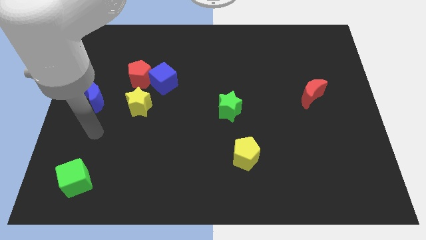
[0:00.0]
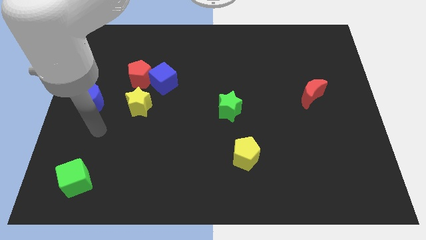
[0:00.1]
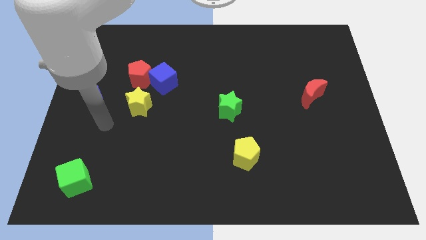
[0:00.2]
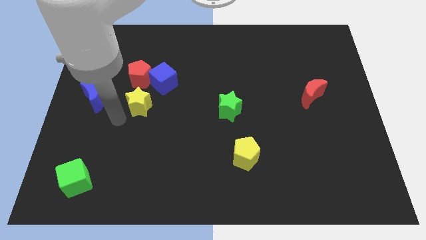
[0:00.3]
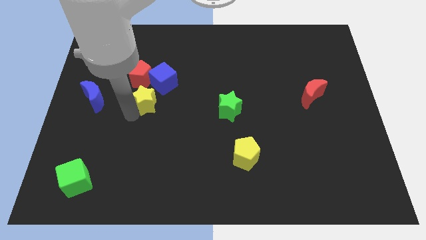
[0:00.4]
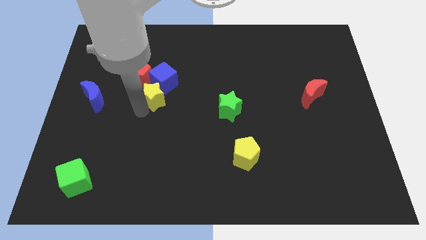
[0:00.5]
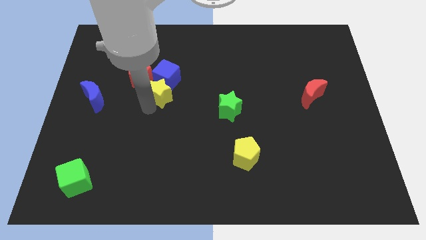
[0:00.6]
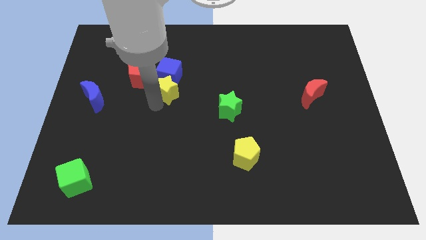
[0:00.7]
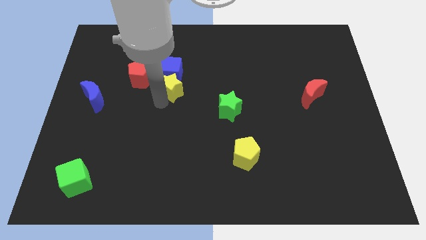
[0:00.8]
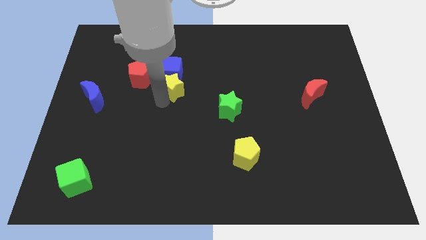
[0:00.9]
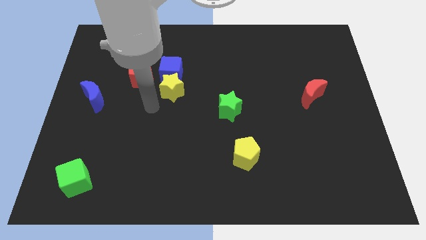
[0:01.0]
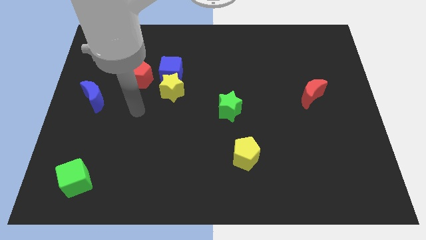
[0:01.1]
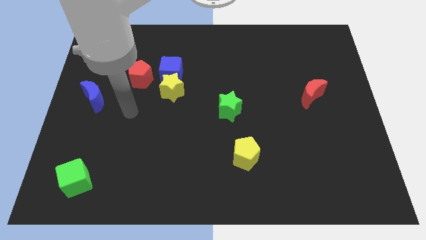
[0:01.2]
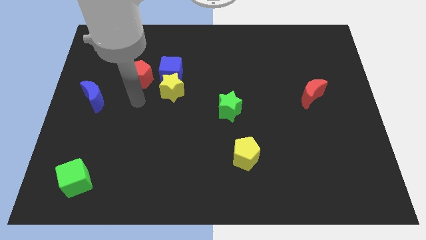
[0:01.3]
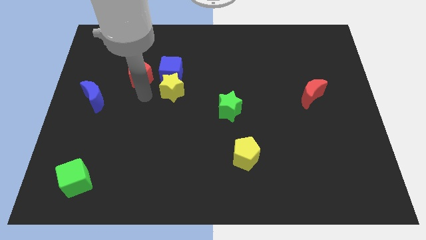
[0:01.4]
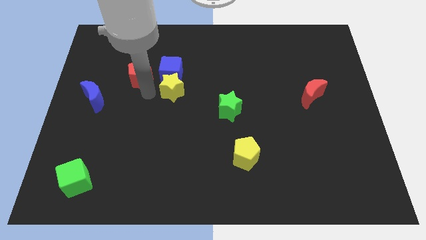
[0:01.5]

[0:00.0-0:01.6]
place the yellow star below the blue cube

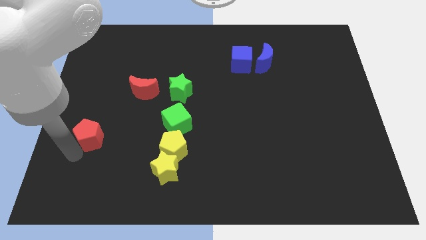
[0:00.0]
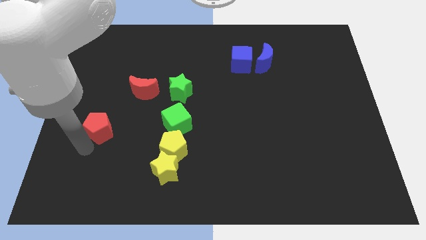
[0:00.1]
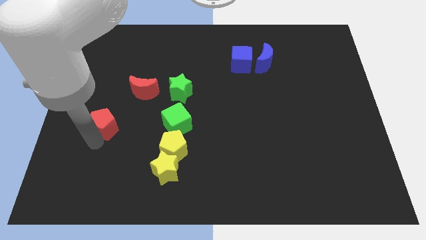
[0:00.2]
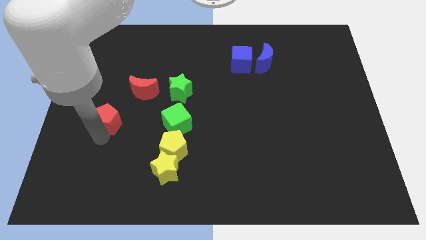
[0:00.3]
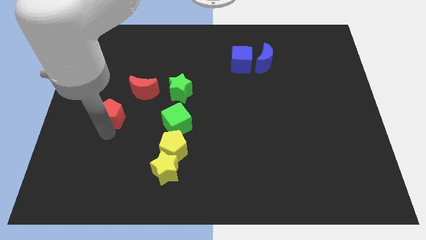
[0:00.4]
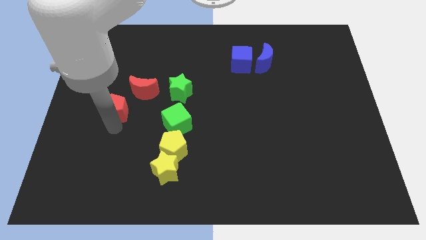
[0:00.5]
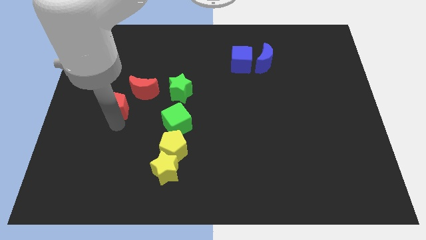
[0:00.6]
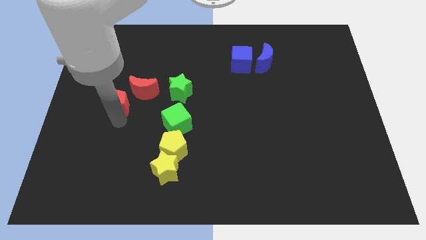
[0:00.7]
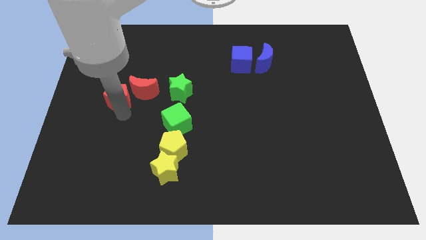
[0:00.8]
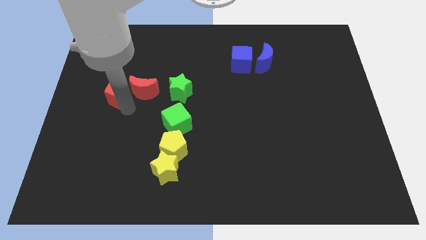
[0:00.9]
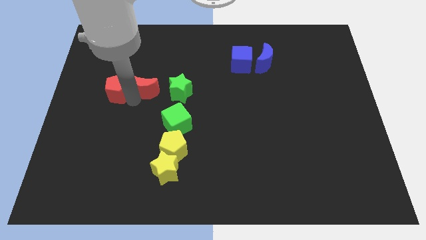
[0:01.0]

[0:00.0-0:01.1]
place the red pentagon to the left side of the red moon

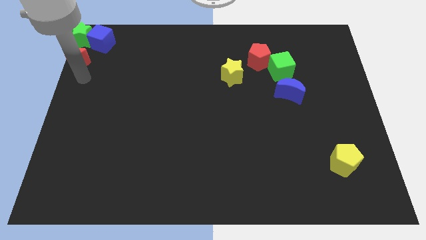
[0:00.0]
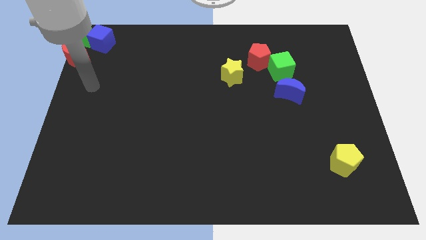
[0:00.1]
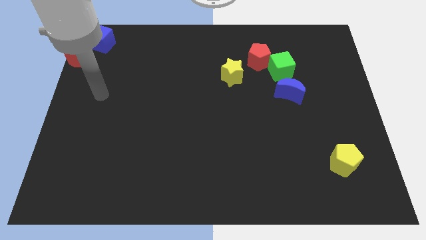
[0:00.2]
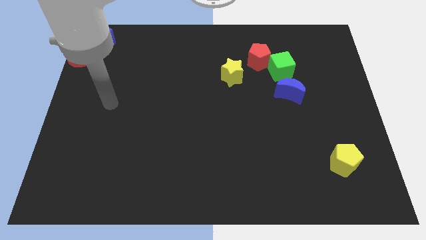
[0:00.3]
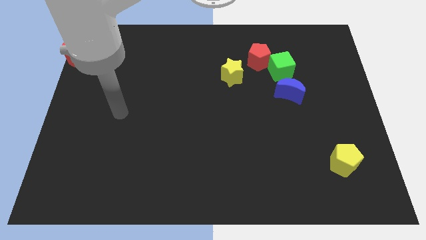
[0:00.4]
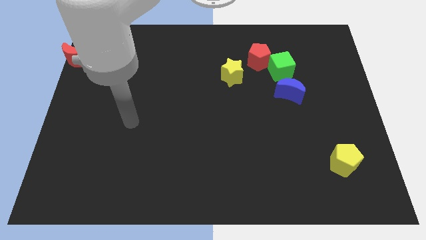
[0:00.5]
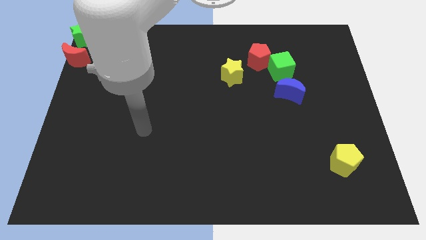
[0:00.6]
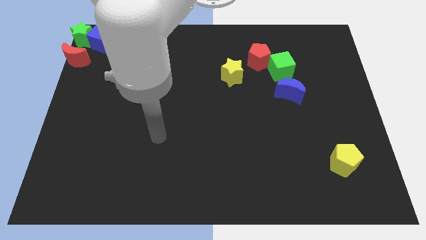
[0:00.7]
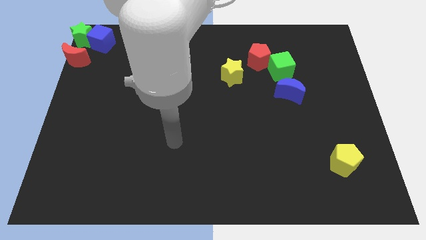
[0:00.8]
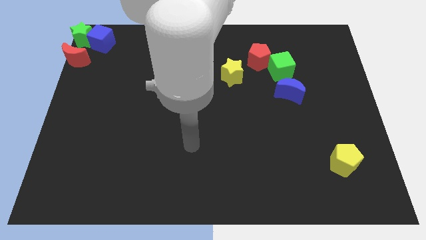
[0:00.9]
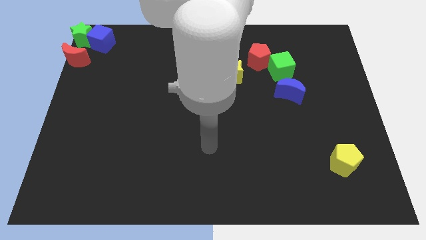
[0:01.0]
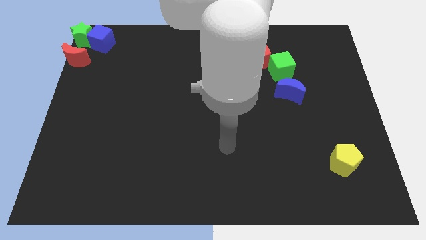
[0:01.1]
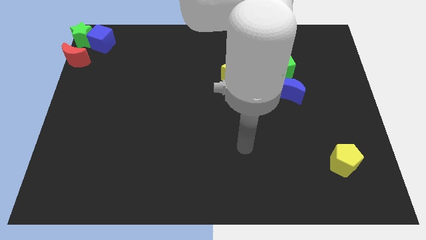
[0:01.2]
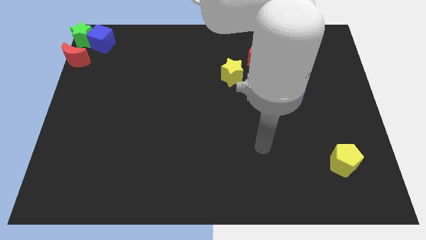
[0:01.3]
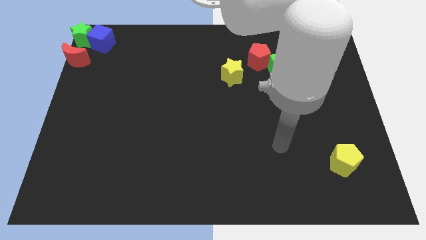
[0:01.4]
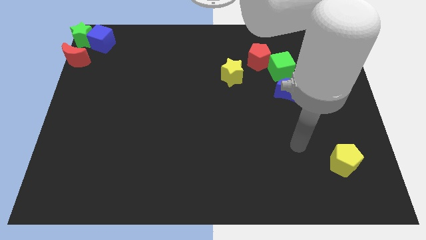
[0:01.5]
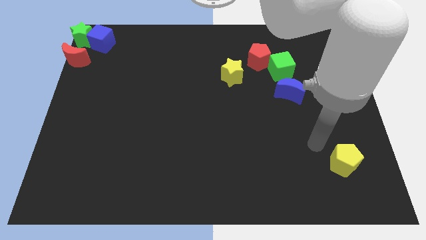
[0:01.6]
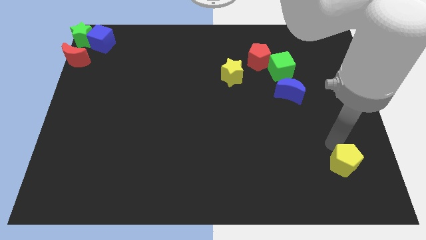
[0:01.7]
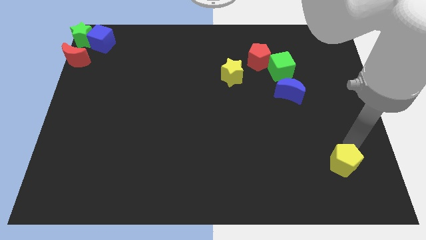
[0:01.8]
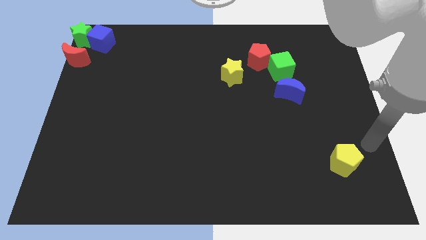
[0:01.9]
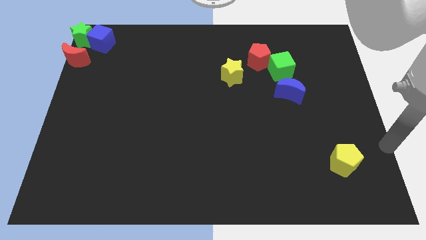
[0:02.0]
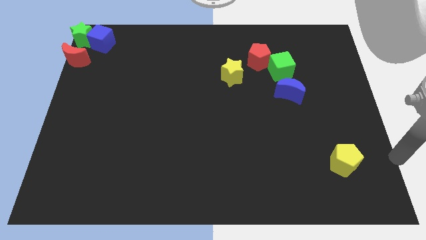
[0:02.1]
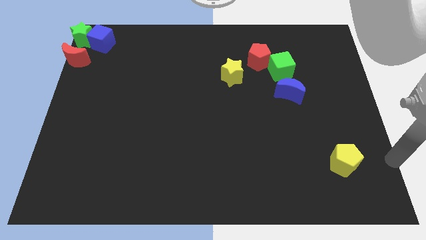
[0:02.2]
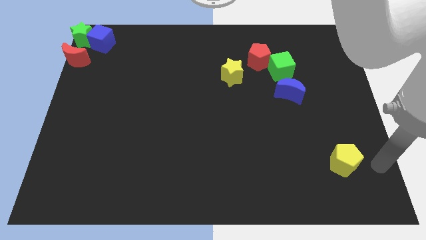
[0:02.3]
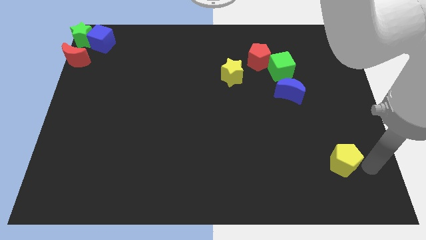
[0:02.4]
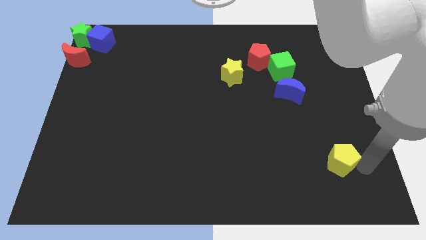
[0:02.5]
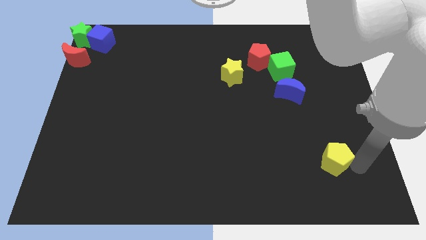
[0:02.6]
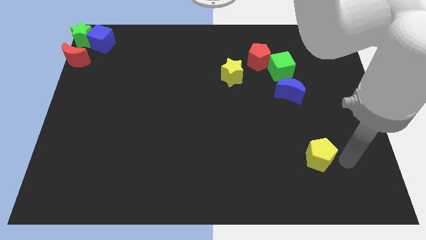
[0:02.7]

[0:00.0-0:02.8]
move your arm from red

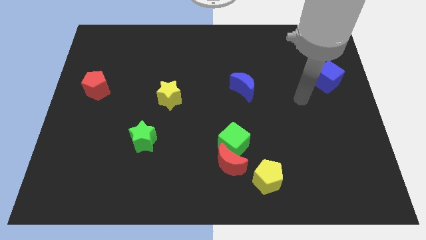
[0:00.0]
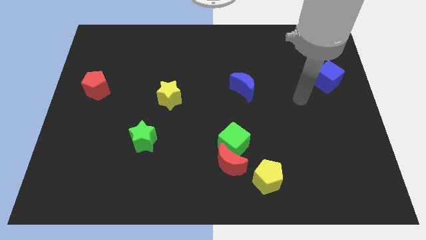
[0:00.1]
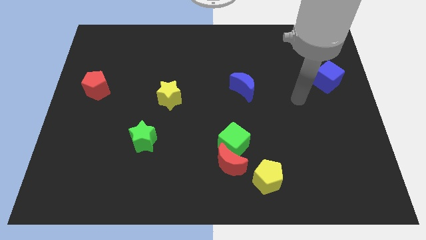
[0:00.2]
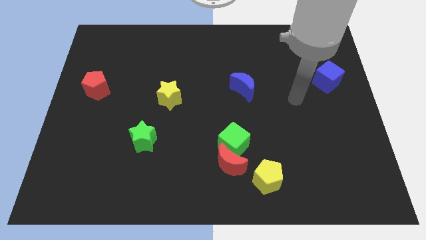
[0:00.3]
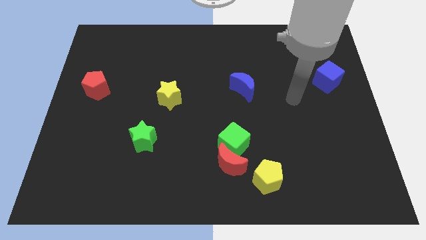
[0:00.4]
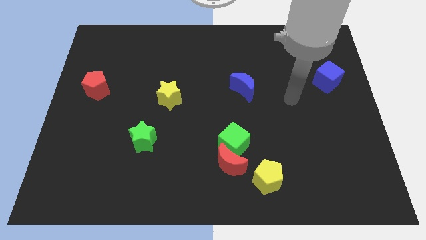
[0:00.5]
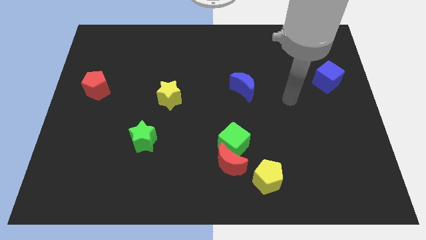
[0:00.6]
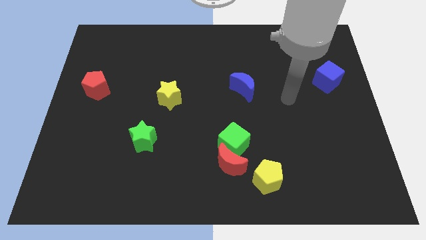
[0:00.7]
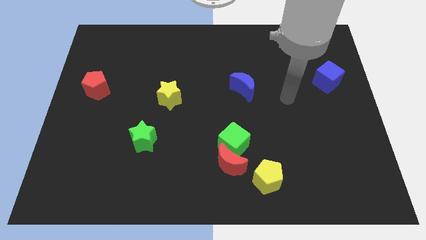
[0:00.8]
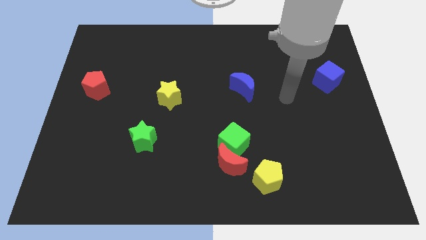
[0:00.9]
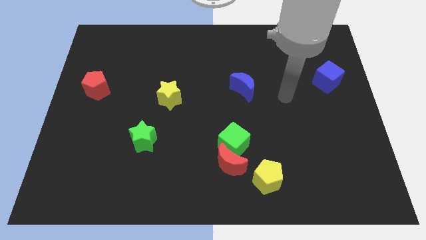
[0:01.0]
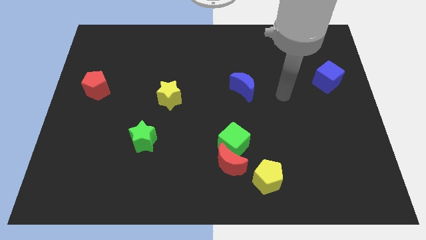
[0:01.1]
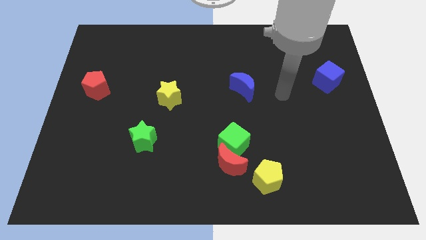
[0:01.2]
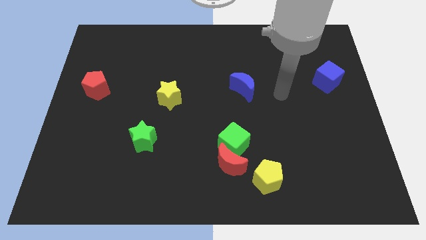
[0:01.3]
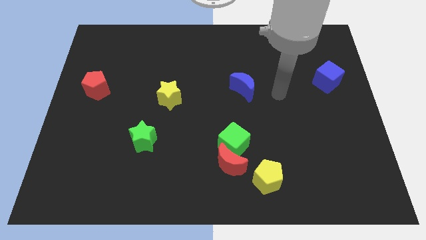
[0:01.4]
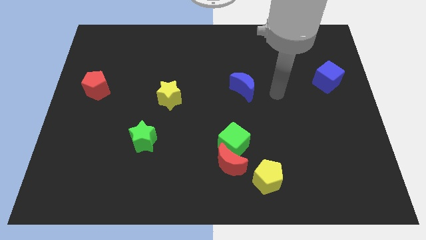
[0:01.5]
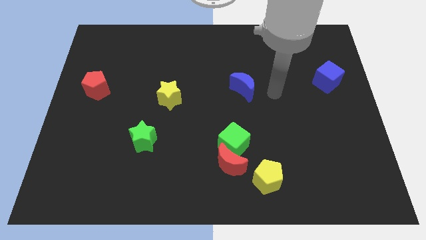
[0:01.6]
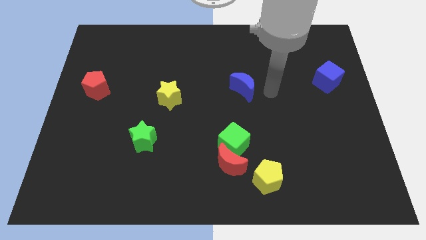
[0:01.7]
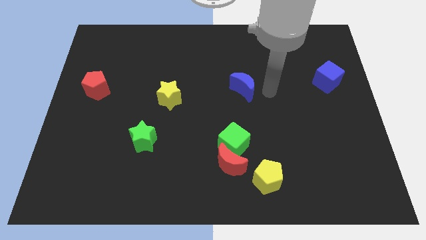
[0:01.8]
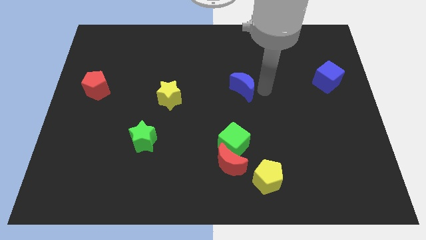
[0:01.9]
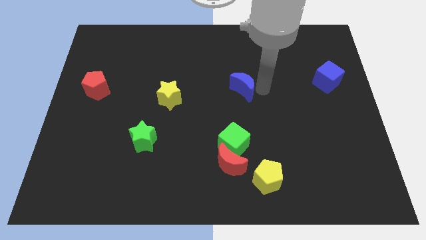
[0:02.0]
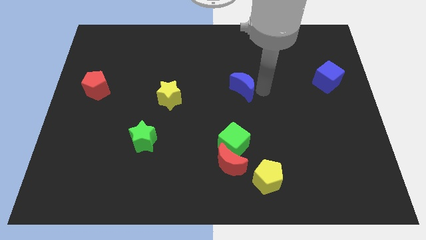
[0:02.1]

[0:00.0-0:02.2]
move your arm close to the blue moon

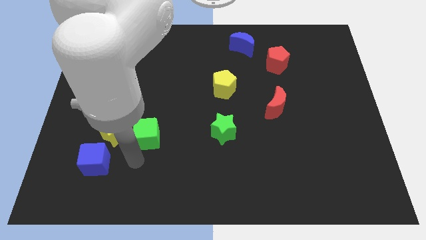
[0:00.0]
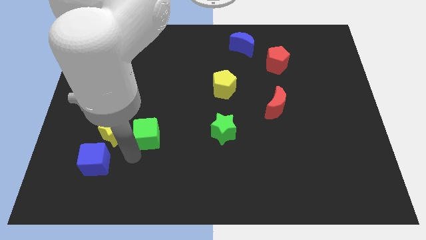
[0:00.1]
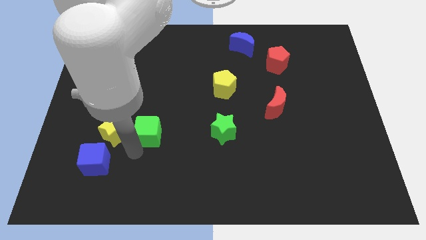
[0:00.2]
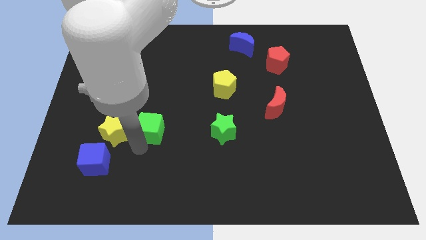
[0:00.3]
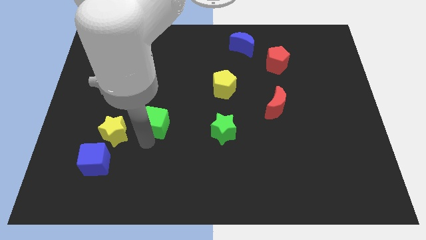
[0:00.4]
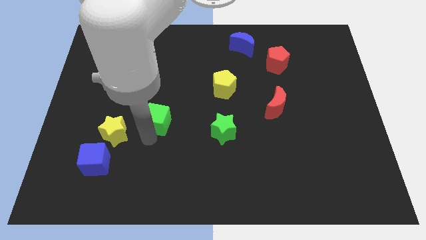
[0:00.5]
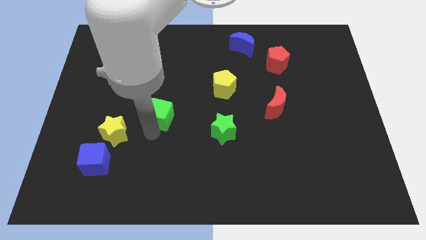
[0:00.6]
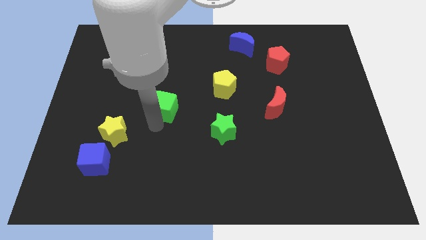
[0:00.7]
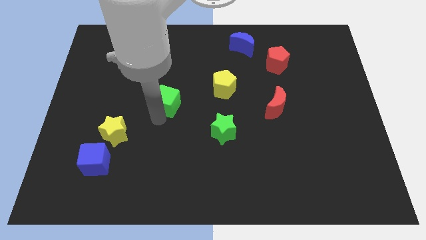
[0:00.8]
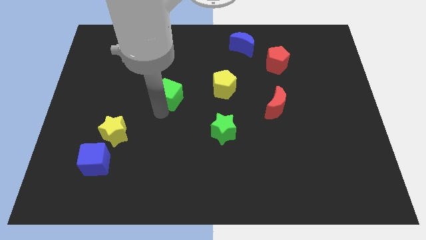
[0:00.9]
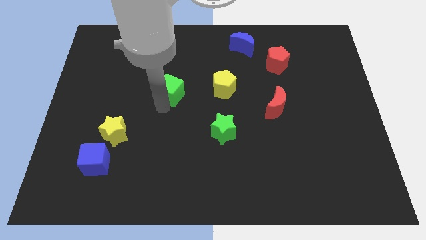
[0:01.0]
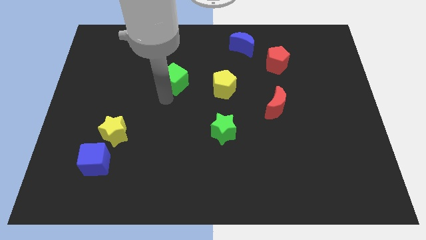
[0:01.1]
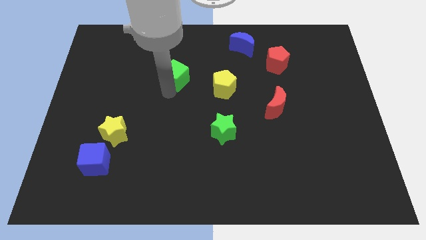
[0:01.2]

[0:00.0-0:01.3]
place the green cube to the left of the yellow pentagon
